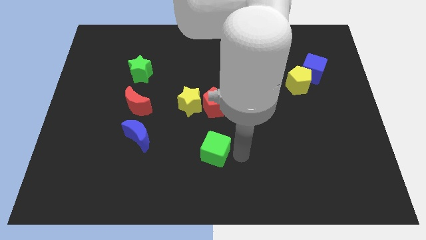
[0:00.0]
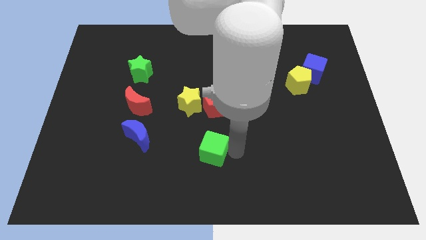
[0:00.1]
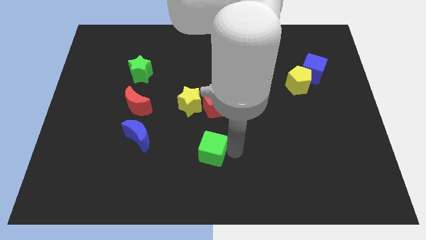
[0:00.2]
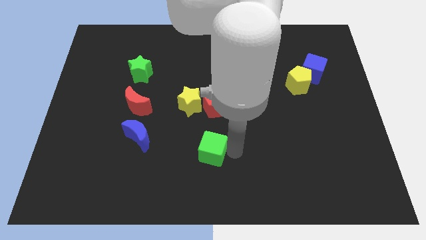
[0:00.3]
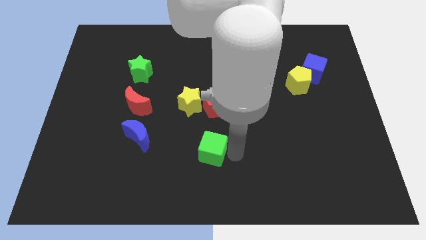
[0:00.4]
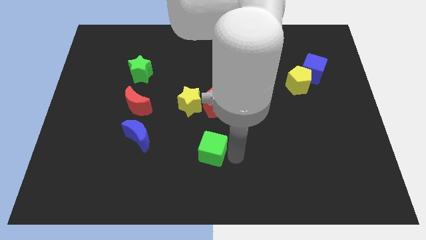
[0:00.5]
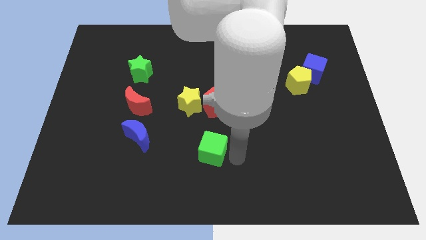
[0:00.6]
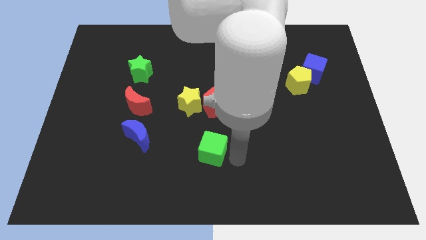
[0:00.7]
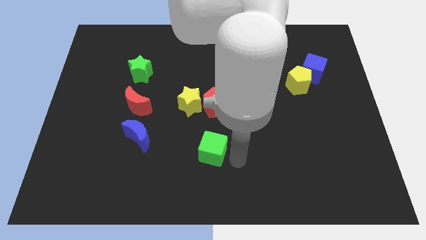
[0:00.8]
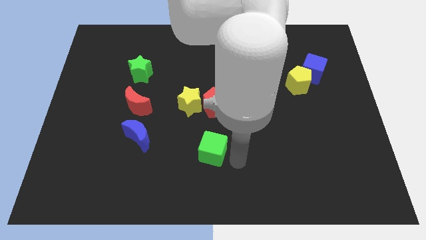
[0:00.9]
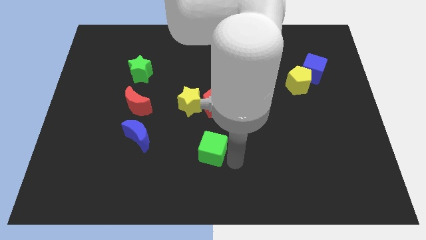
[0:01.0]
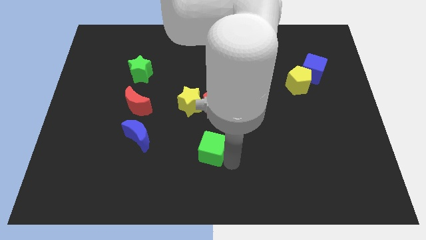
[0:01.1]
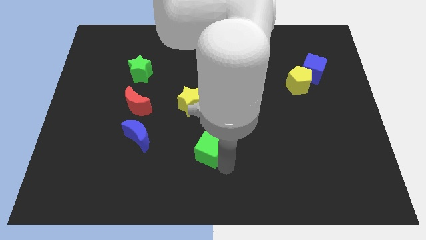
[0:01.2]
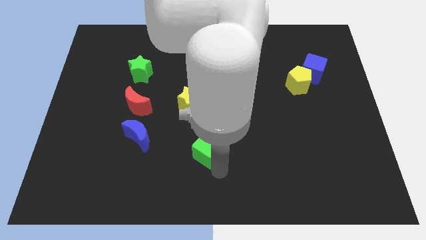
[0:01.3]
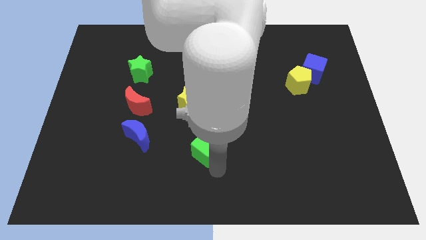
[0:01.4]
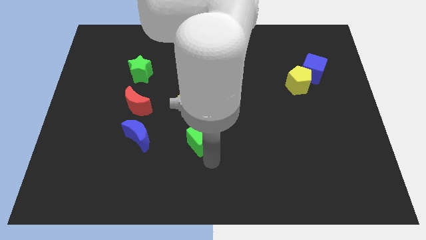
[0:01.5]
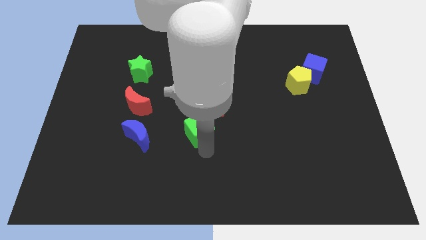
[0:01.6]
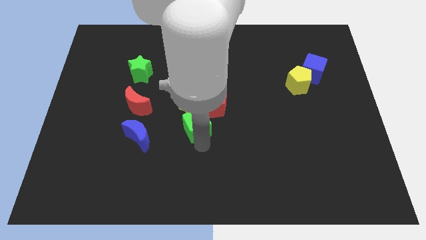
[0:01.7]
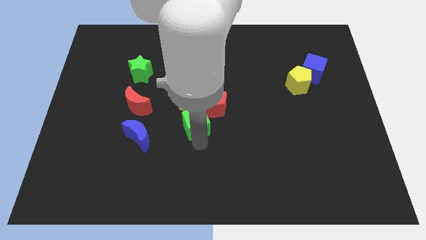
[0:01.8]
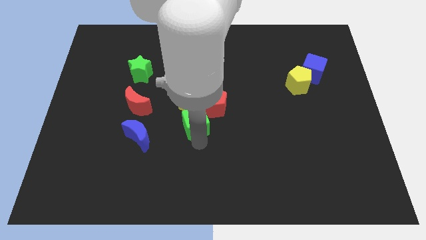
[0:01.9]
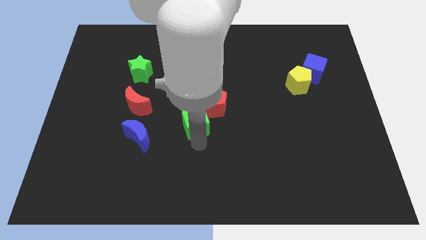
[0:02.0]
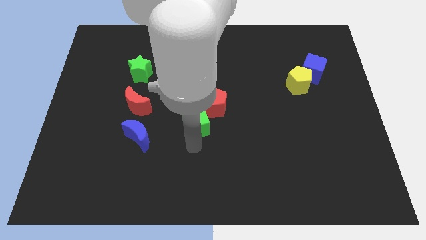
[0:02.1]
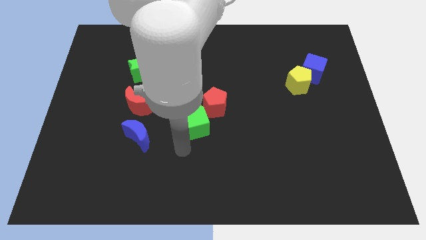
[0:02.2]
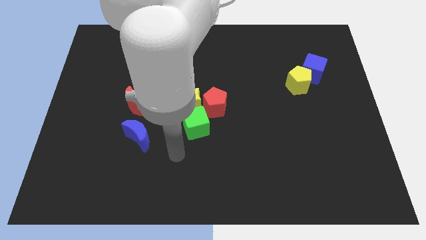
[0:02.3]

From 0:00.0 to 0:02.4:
place the green cube close to the yellow star

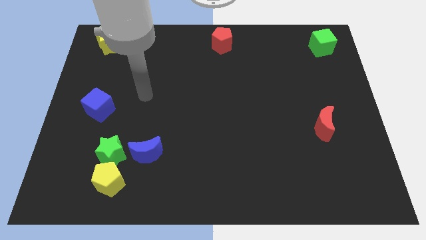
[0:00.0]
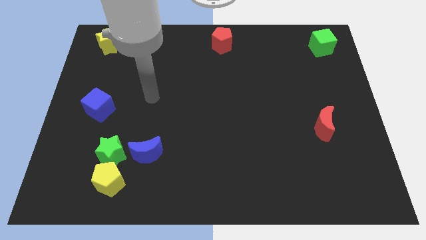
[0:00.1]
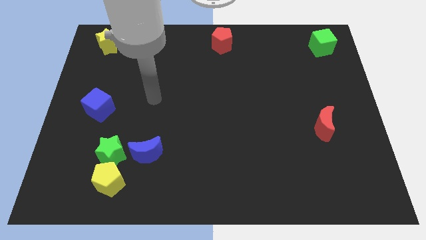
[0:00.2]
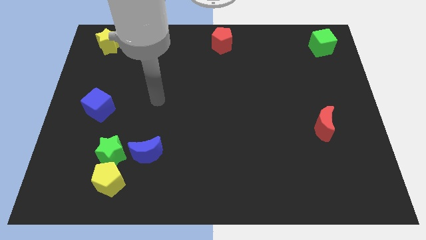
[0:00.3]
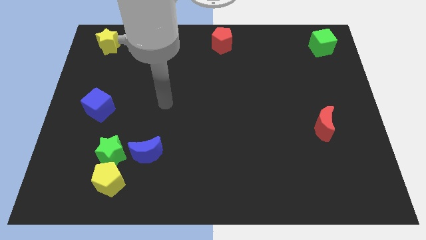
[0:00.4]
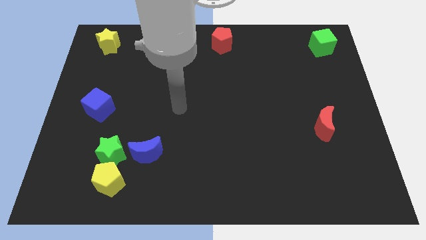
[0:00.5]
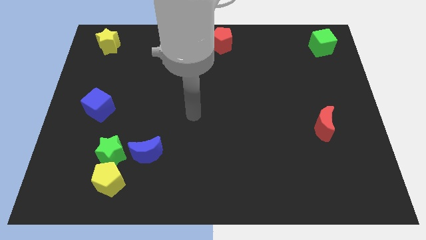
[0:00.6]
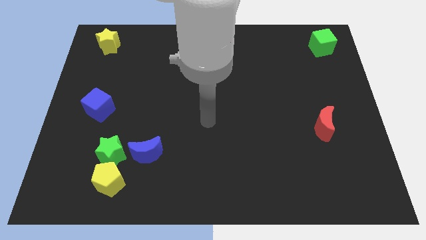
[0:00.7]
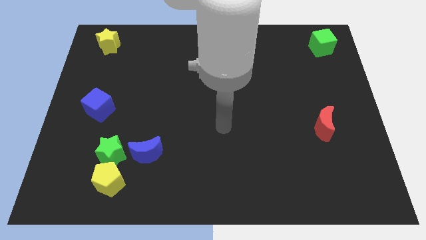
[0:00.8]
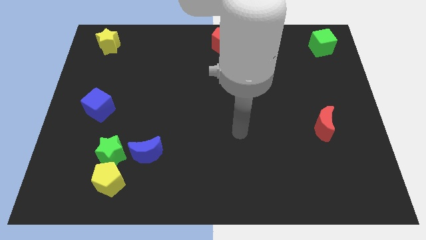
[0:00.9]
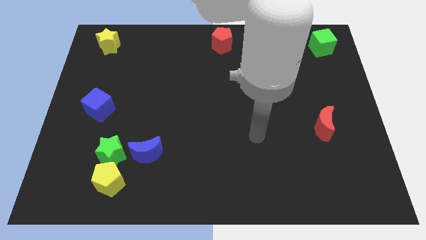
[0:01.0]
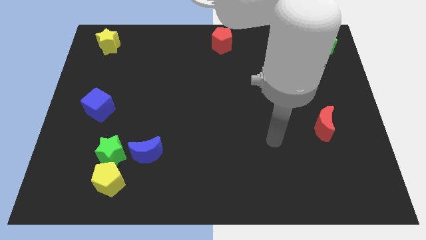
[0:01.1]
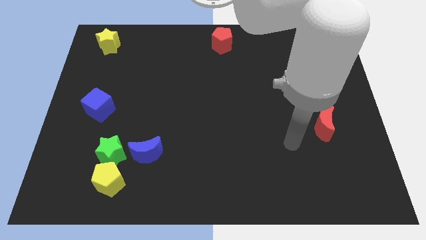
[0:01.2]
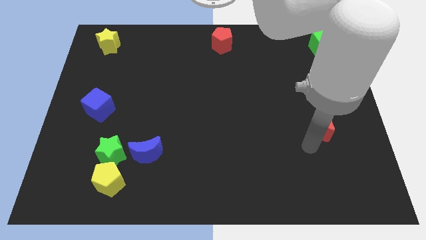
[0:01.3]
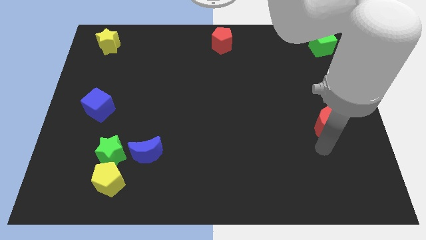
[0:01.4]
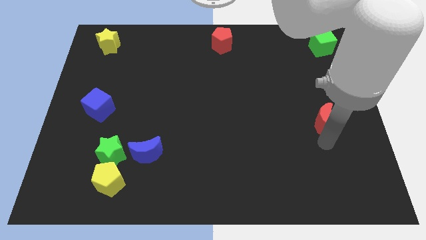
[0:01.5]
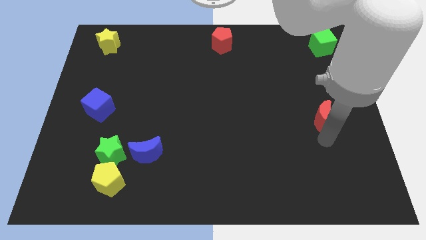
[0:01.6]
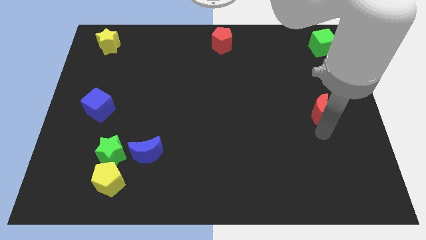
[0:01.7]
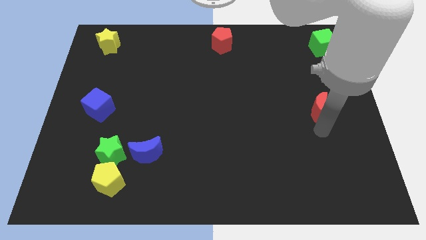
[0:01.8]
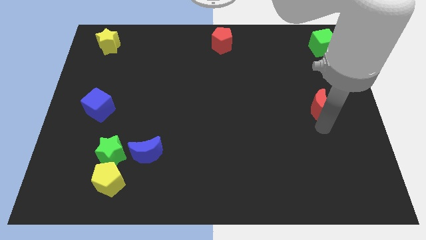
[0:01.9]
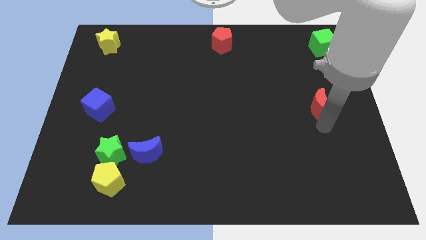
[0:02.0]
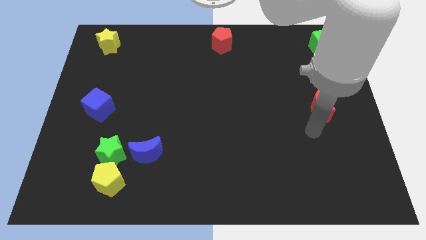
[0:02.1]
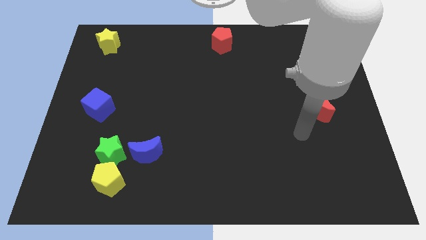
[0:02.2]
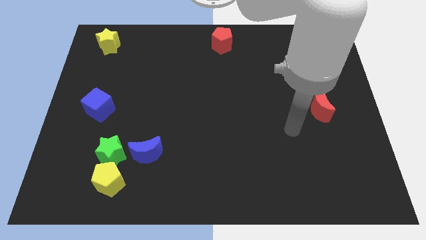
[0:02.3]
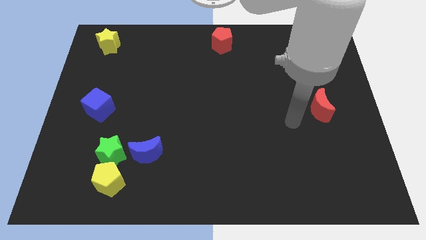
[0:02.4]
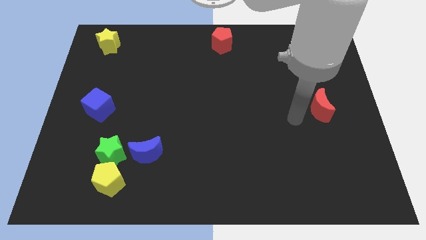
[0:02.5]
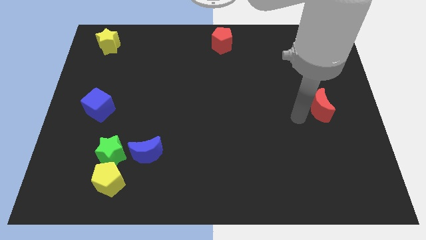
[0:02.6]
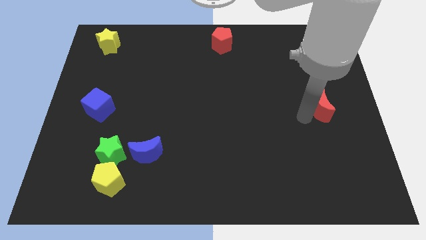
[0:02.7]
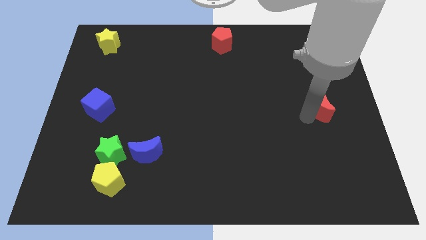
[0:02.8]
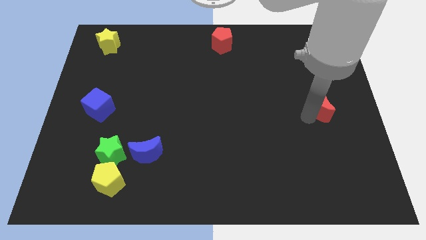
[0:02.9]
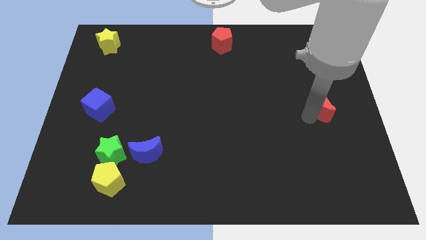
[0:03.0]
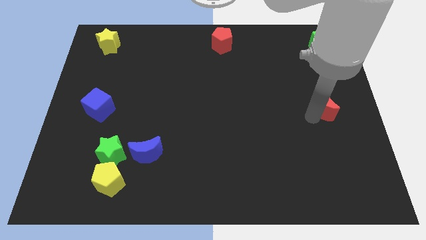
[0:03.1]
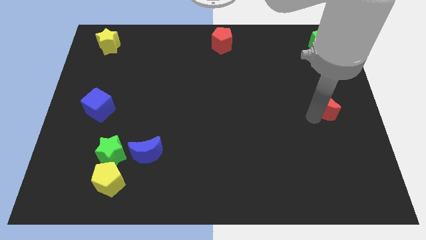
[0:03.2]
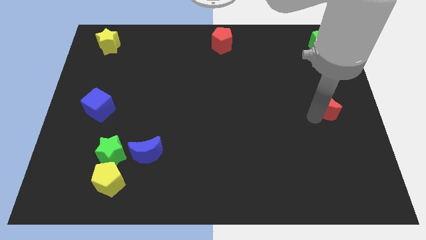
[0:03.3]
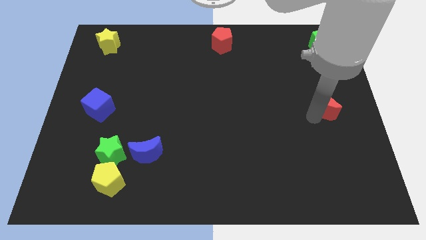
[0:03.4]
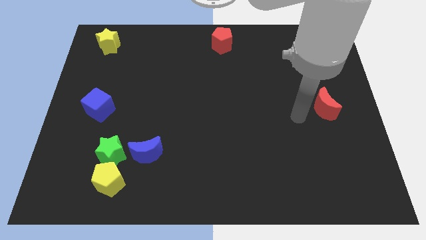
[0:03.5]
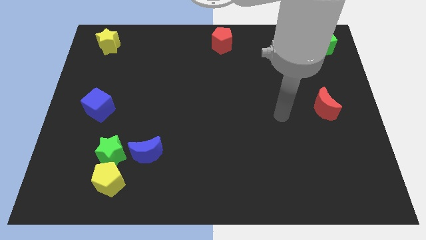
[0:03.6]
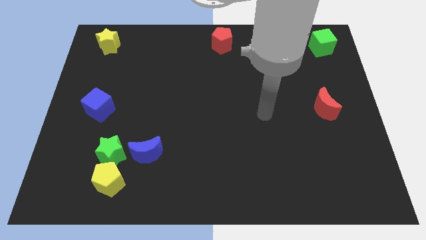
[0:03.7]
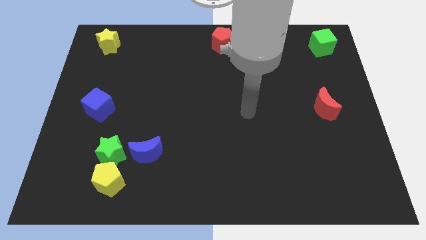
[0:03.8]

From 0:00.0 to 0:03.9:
slightly push the red moon towards the center right of the board

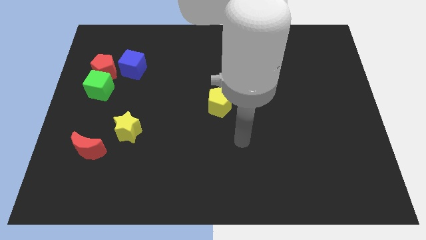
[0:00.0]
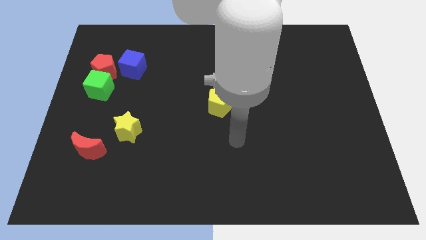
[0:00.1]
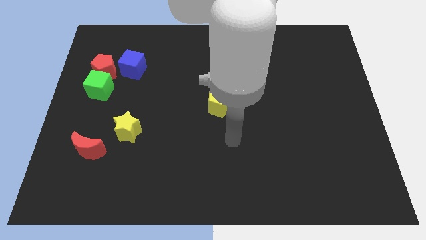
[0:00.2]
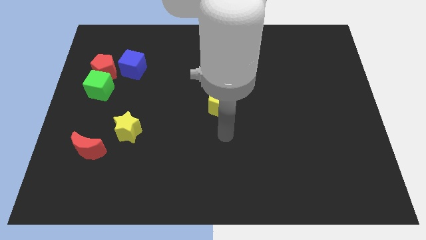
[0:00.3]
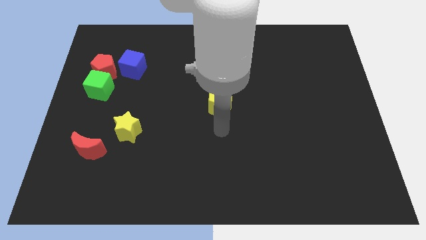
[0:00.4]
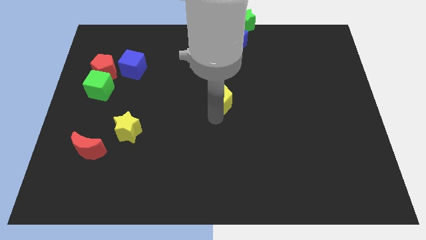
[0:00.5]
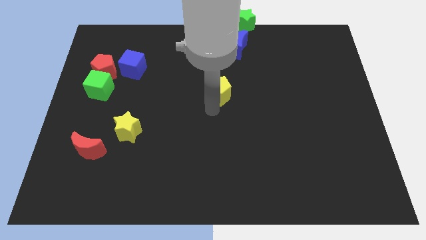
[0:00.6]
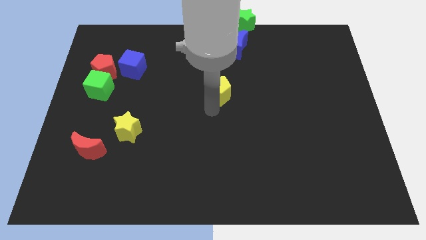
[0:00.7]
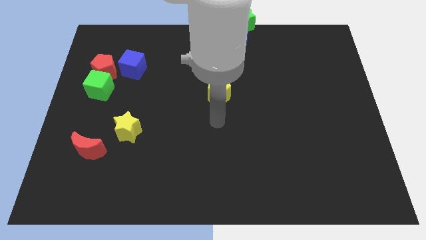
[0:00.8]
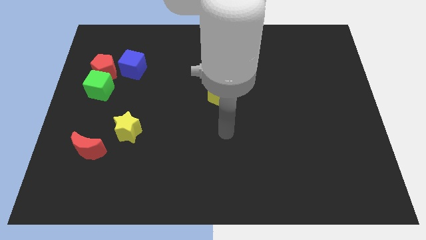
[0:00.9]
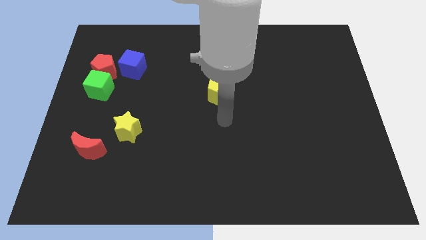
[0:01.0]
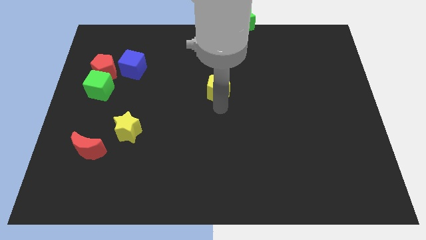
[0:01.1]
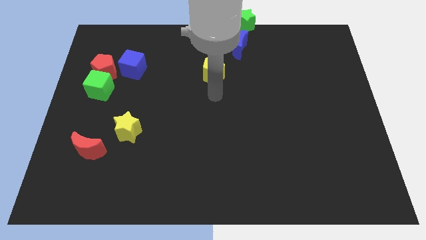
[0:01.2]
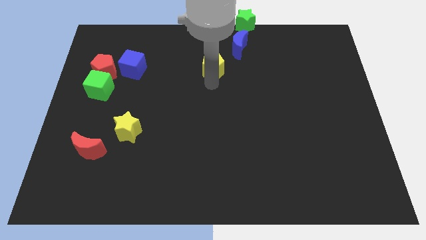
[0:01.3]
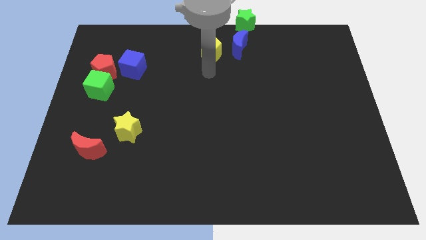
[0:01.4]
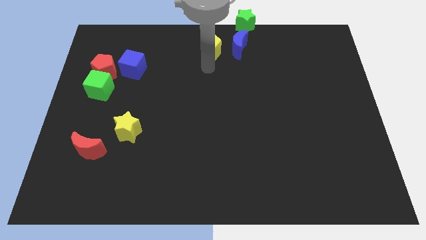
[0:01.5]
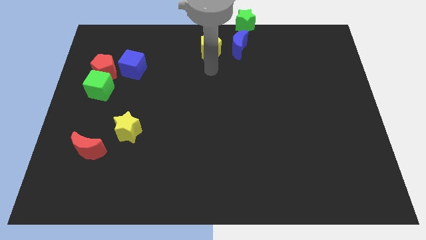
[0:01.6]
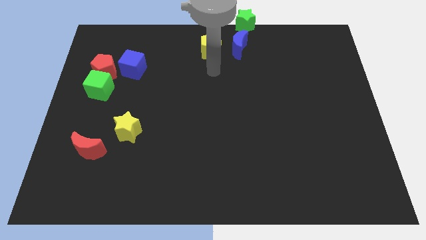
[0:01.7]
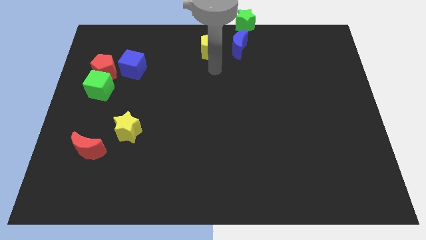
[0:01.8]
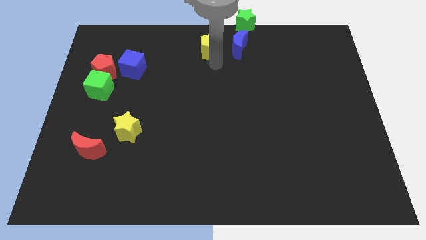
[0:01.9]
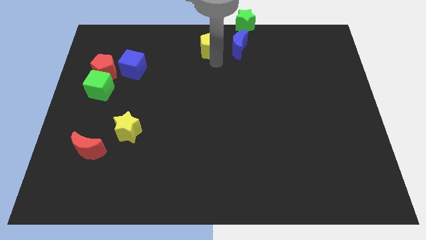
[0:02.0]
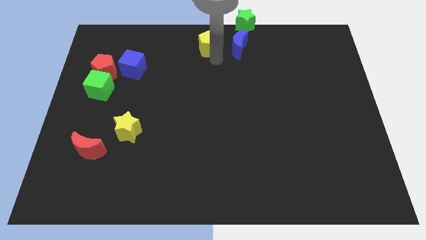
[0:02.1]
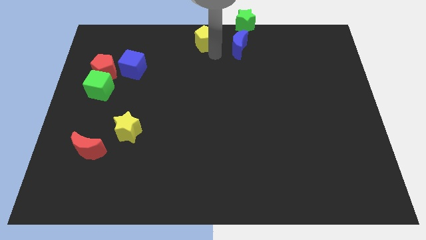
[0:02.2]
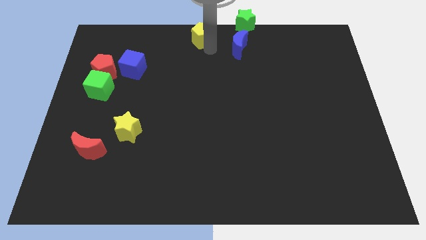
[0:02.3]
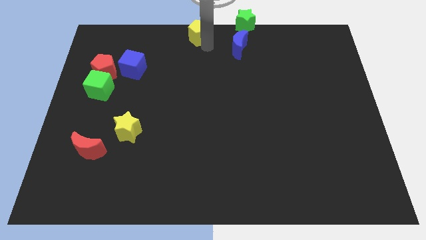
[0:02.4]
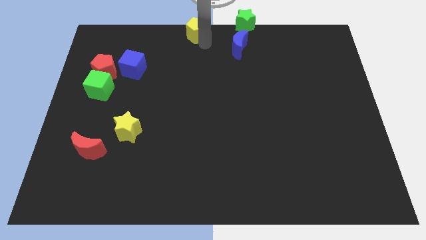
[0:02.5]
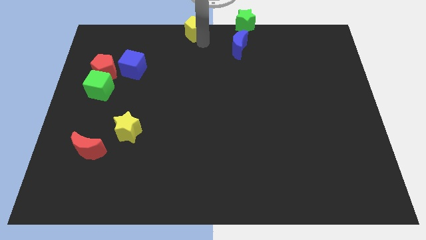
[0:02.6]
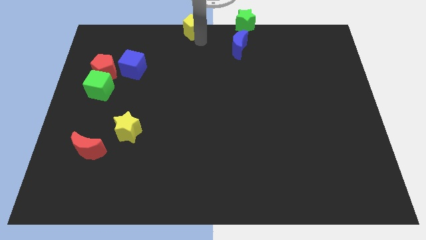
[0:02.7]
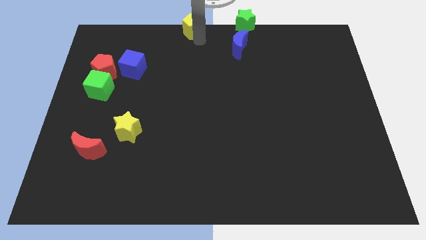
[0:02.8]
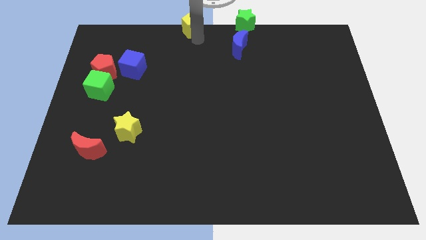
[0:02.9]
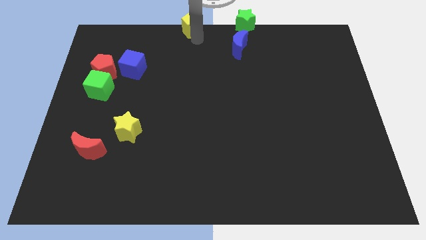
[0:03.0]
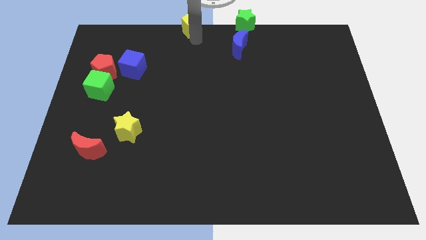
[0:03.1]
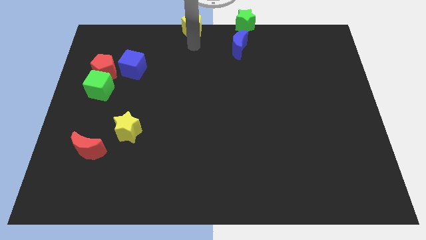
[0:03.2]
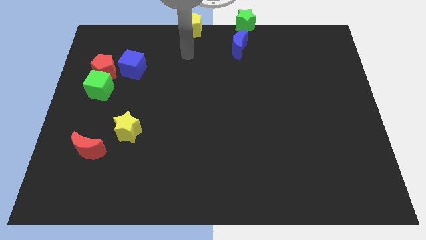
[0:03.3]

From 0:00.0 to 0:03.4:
place the yellpw pentagon to the left of the green star
